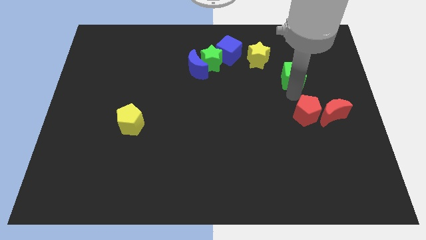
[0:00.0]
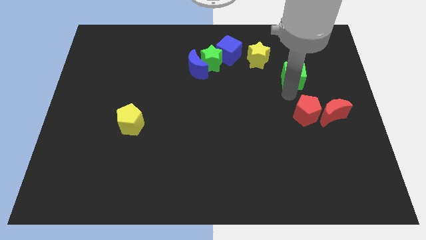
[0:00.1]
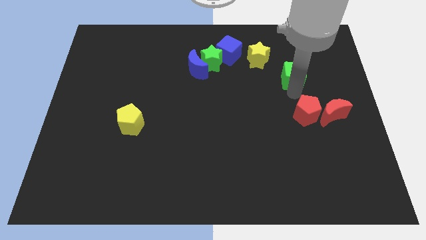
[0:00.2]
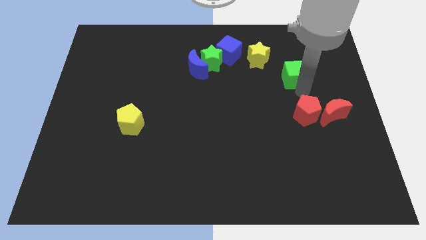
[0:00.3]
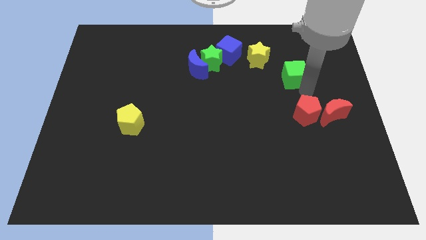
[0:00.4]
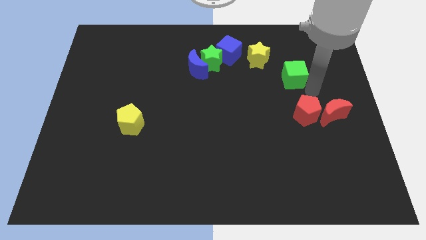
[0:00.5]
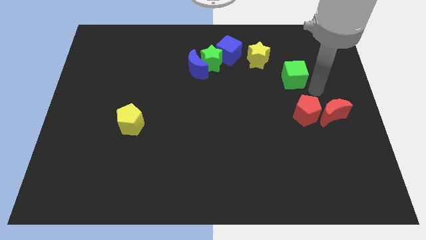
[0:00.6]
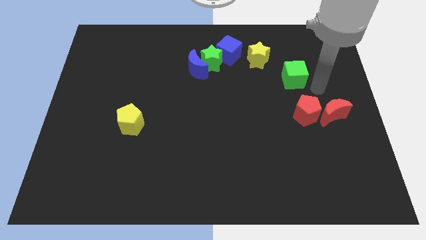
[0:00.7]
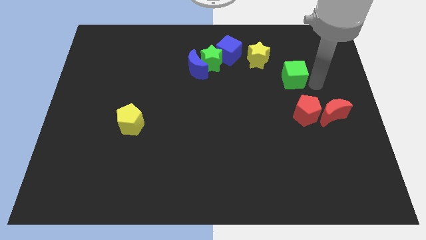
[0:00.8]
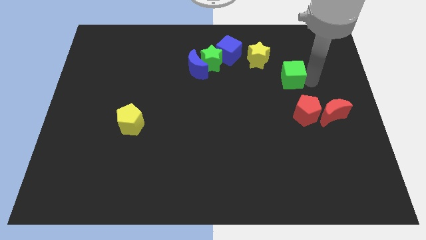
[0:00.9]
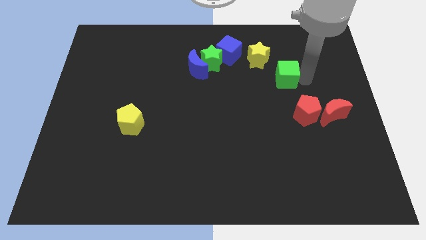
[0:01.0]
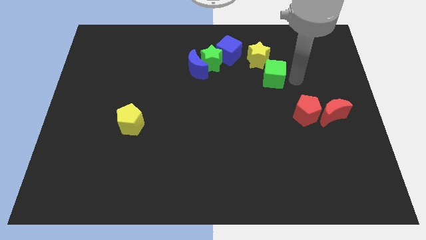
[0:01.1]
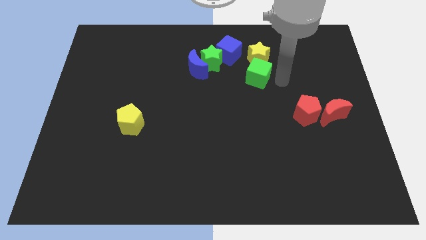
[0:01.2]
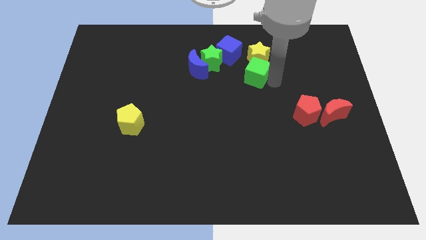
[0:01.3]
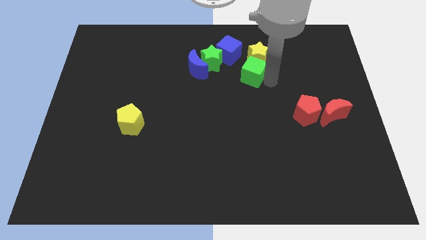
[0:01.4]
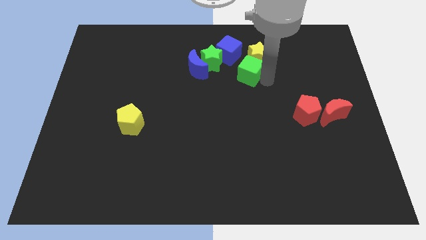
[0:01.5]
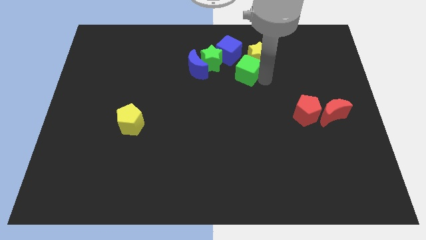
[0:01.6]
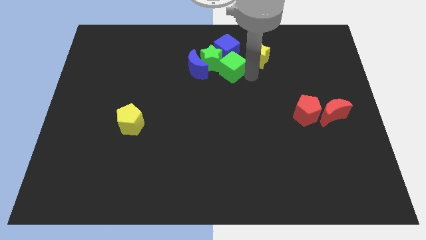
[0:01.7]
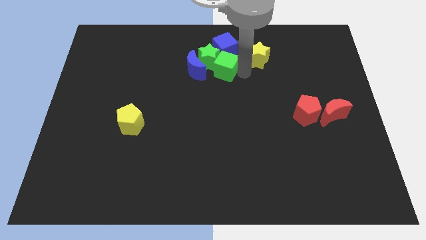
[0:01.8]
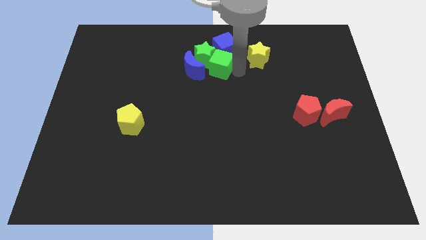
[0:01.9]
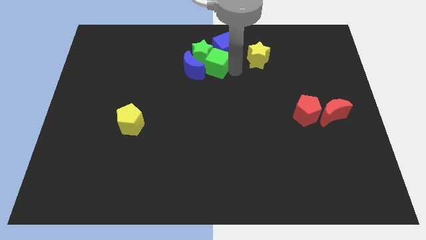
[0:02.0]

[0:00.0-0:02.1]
push green cube to the right of blue moon

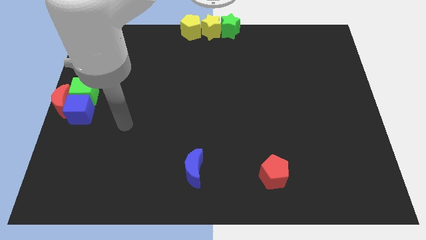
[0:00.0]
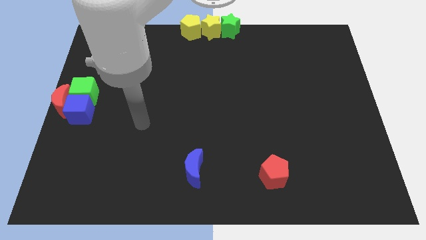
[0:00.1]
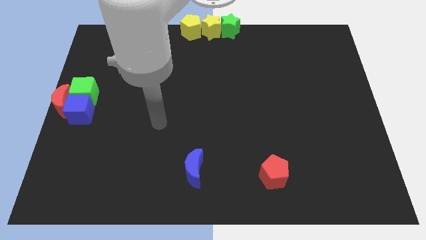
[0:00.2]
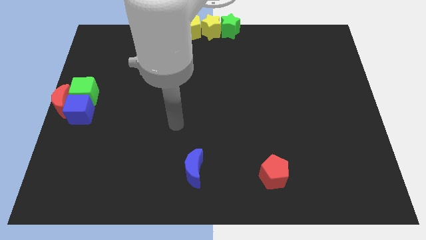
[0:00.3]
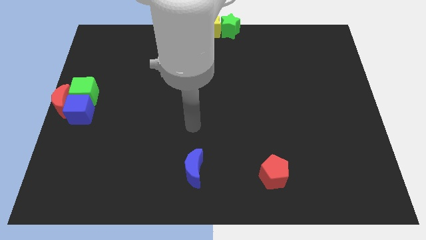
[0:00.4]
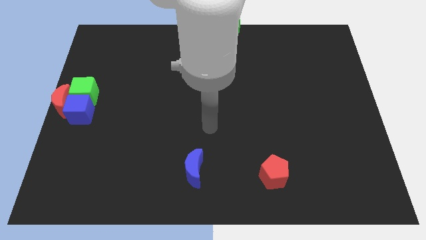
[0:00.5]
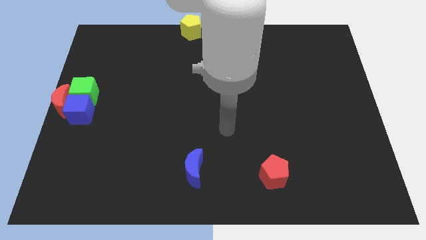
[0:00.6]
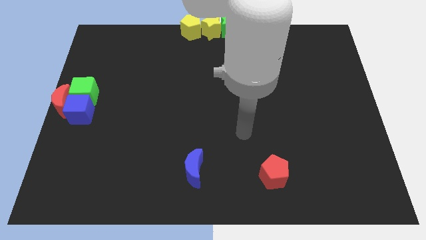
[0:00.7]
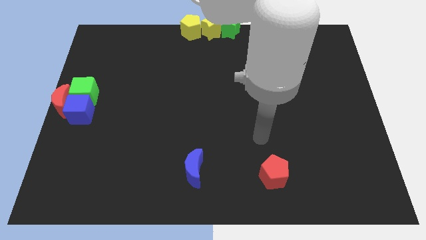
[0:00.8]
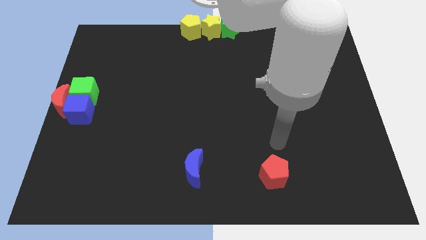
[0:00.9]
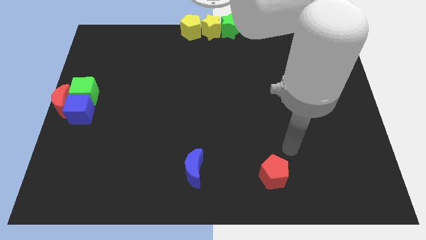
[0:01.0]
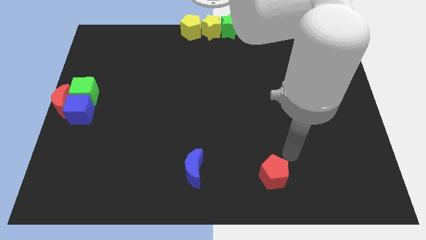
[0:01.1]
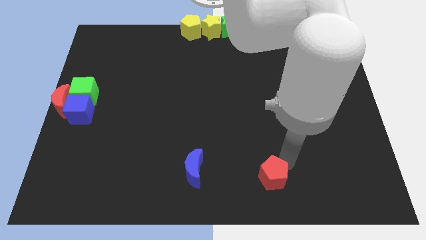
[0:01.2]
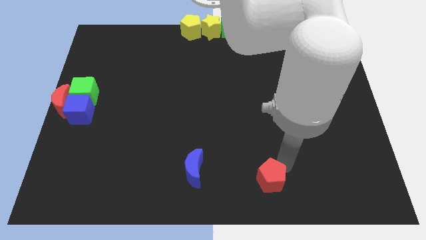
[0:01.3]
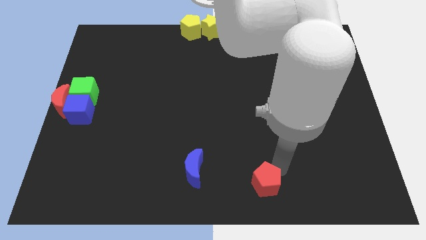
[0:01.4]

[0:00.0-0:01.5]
move the red pentagon slightly towards the bottom

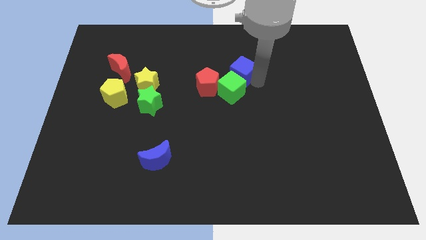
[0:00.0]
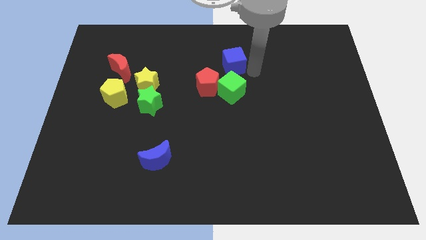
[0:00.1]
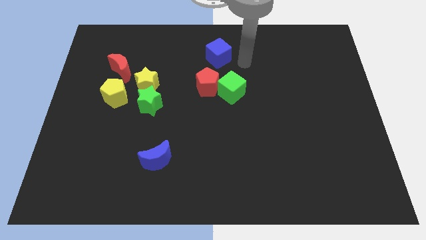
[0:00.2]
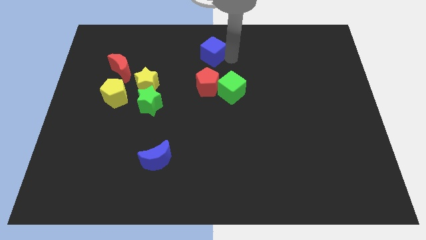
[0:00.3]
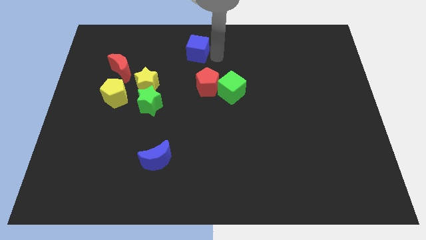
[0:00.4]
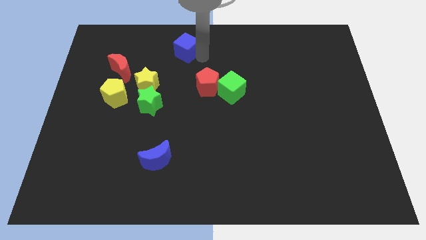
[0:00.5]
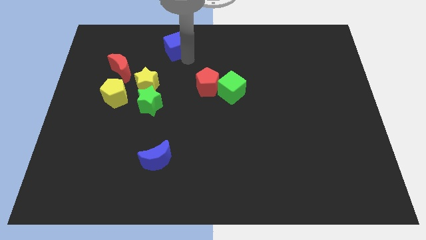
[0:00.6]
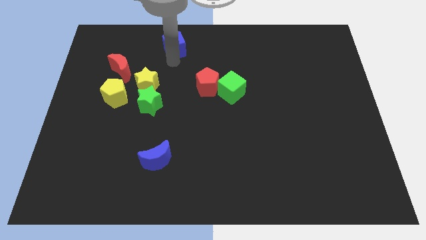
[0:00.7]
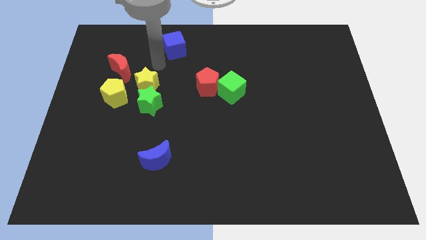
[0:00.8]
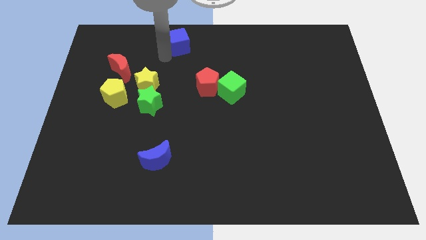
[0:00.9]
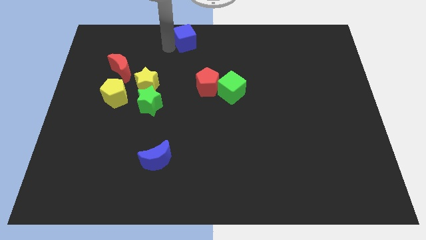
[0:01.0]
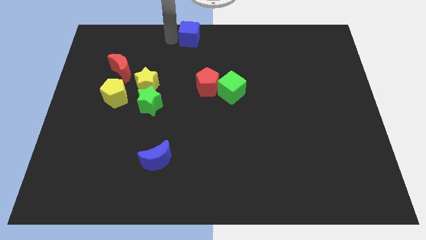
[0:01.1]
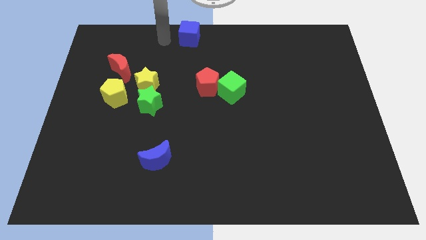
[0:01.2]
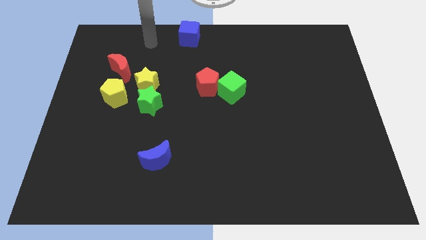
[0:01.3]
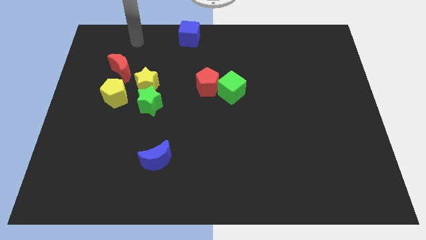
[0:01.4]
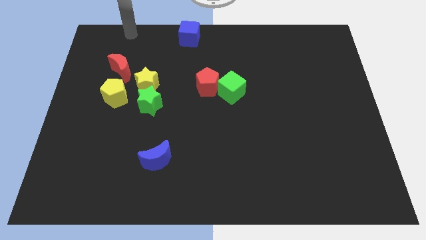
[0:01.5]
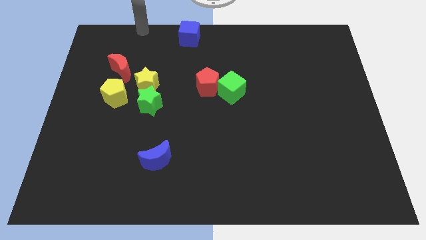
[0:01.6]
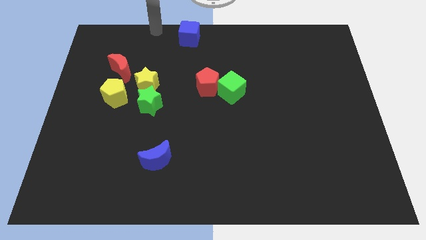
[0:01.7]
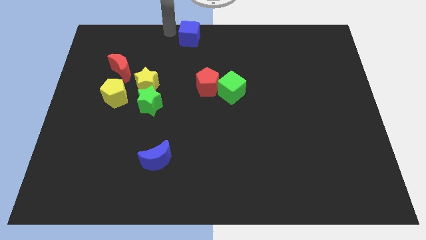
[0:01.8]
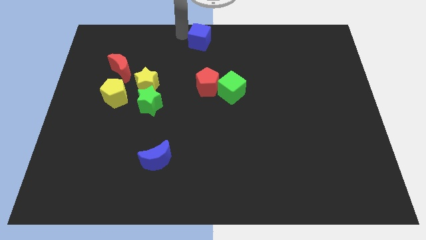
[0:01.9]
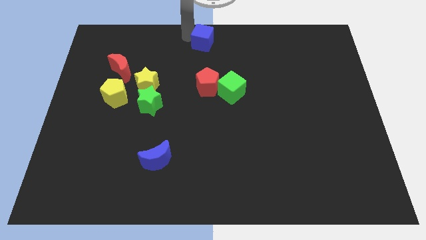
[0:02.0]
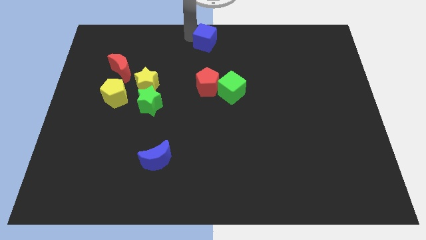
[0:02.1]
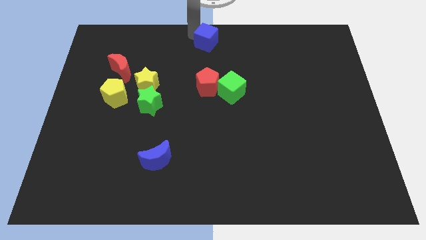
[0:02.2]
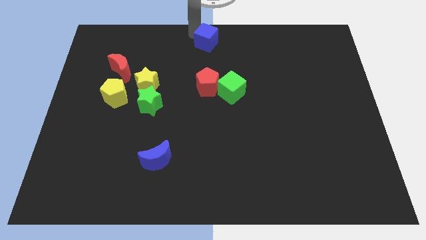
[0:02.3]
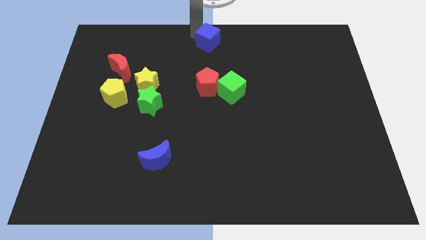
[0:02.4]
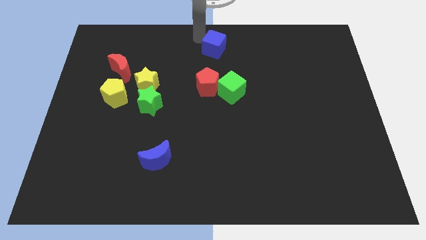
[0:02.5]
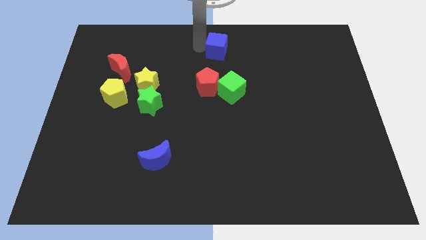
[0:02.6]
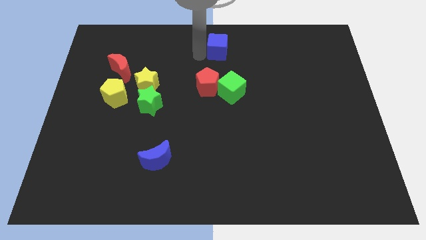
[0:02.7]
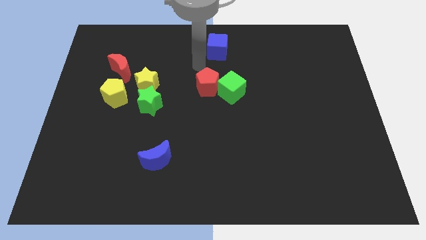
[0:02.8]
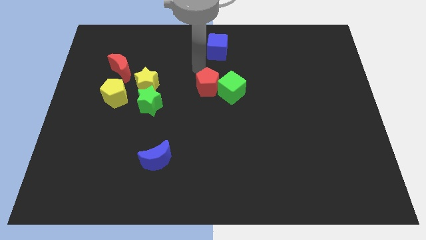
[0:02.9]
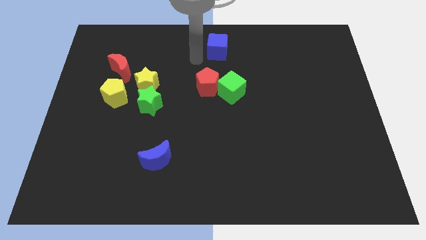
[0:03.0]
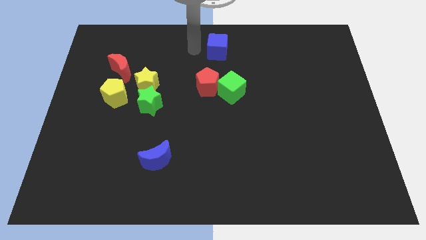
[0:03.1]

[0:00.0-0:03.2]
move the blue cube at the top center

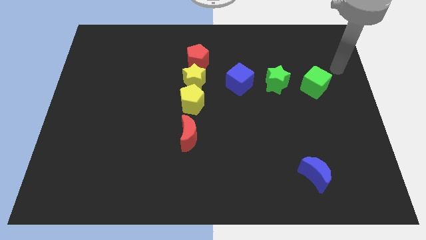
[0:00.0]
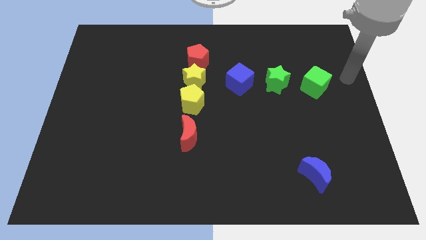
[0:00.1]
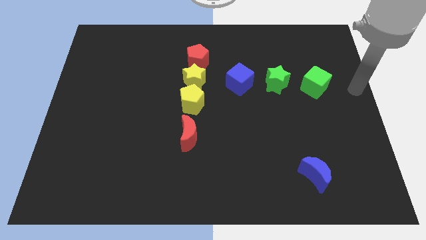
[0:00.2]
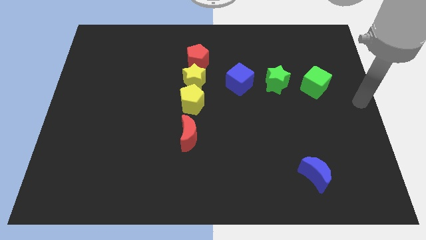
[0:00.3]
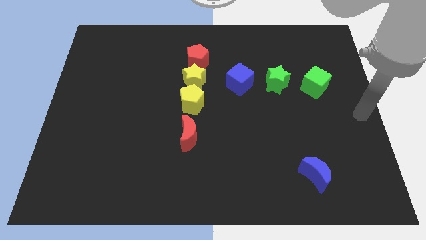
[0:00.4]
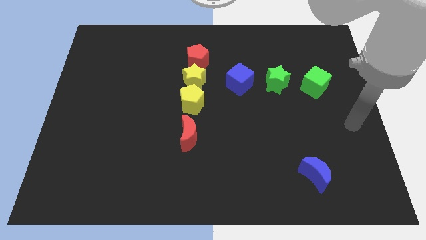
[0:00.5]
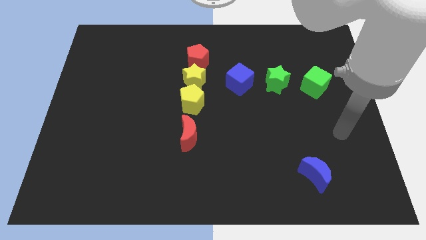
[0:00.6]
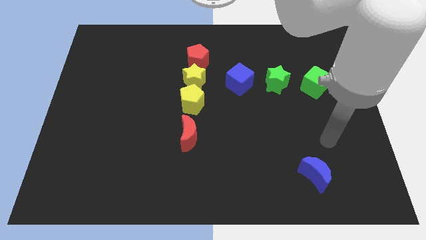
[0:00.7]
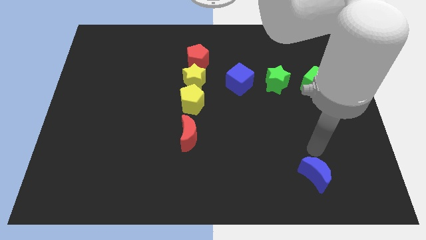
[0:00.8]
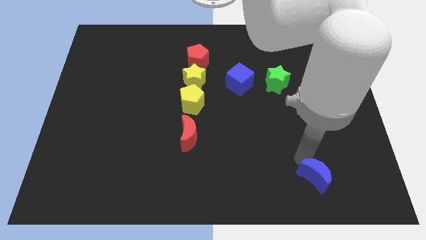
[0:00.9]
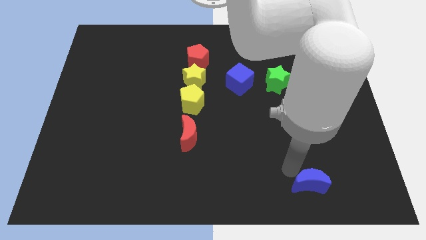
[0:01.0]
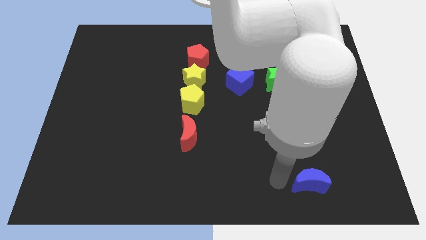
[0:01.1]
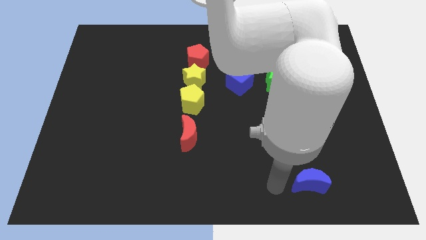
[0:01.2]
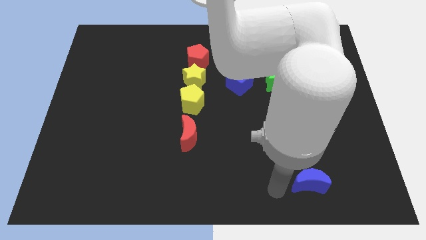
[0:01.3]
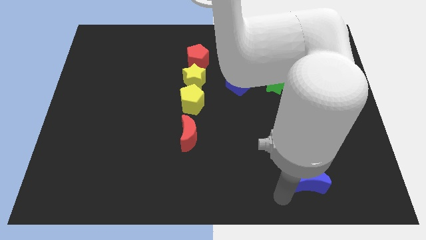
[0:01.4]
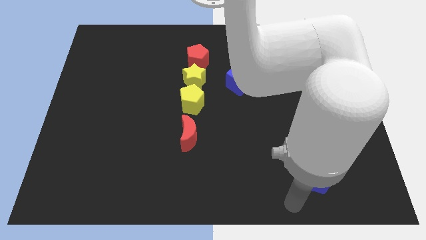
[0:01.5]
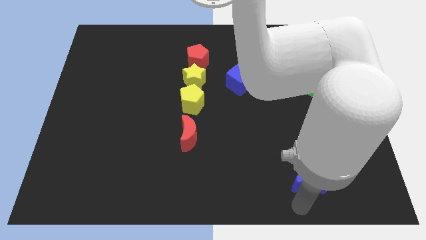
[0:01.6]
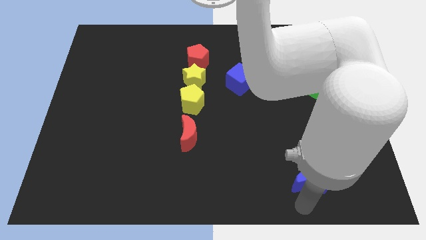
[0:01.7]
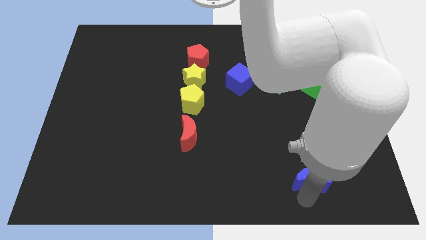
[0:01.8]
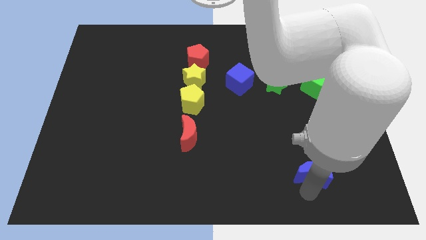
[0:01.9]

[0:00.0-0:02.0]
place your arm below the blue moon
